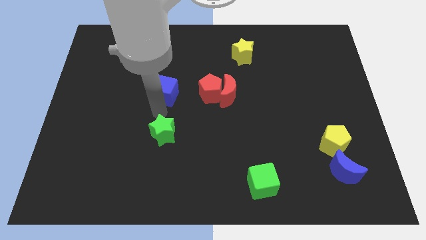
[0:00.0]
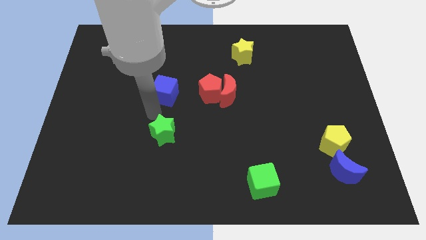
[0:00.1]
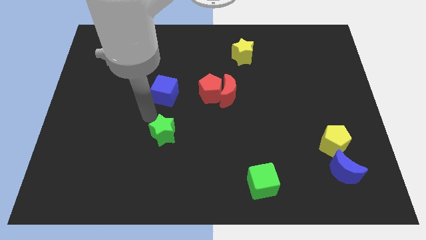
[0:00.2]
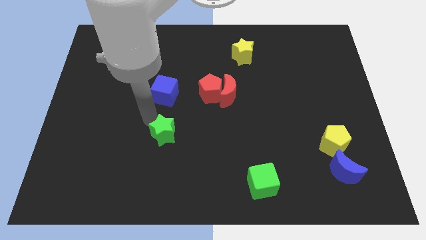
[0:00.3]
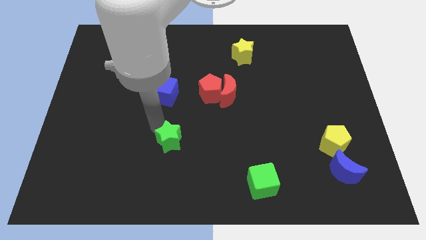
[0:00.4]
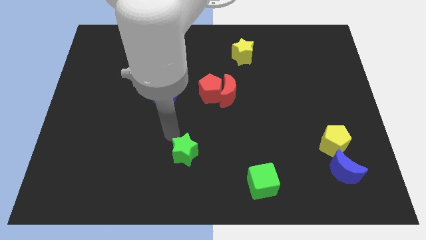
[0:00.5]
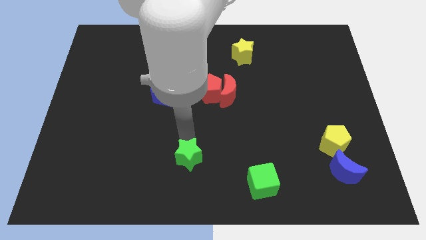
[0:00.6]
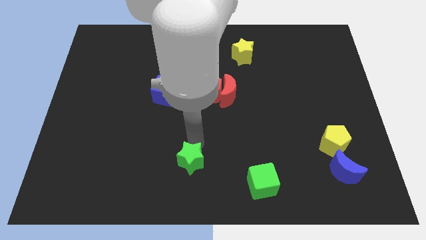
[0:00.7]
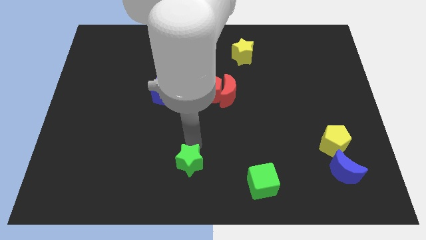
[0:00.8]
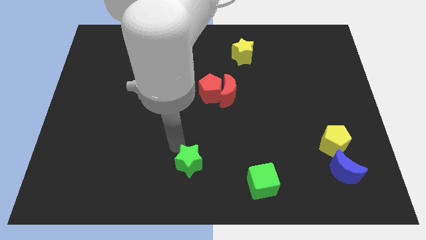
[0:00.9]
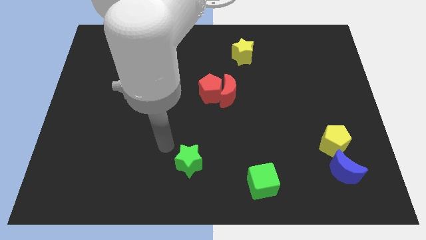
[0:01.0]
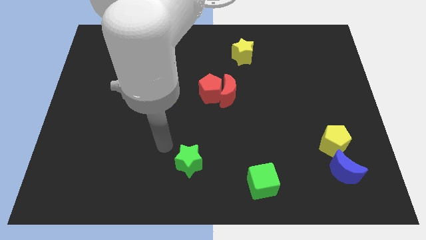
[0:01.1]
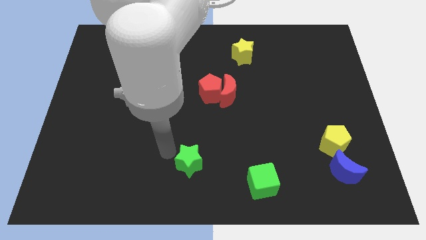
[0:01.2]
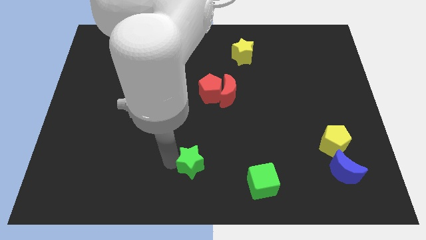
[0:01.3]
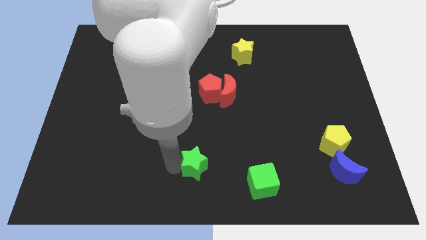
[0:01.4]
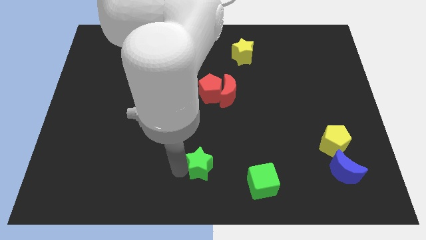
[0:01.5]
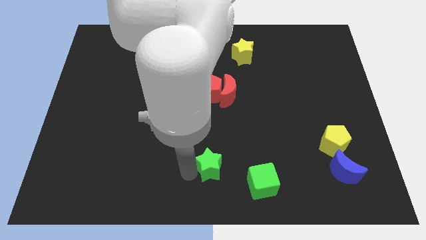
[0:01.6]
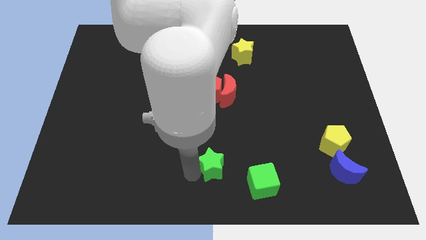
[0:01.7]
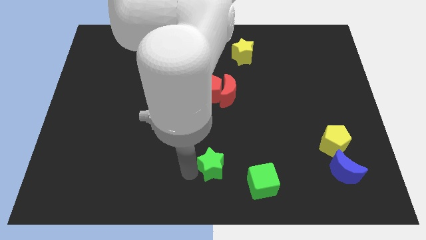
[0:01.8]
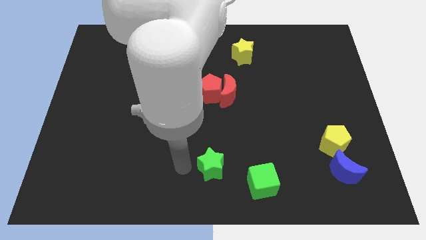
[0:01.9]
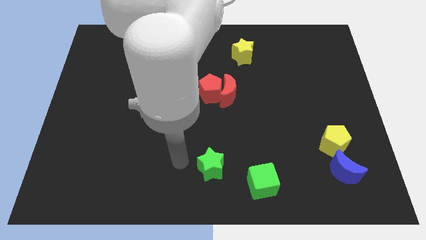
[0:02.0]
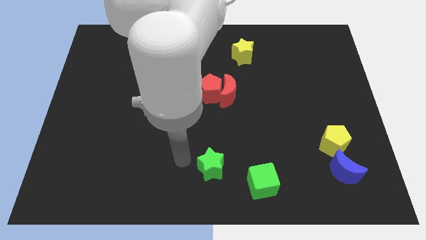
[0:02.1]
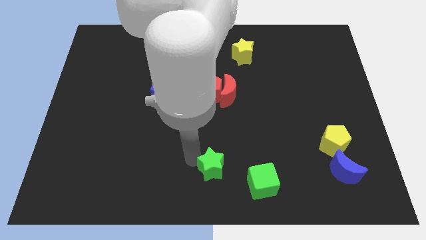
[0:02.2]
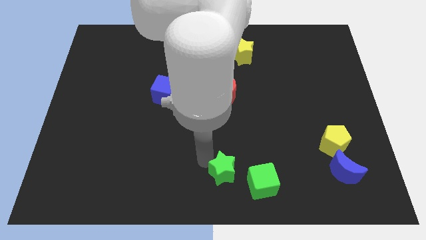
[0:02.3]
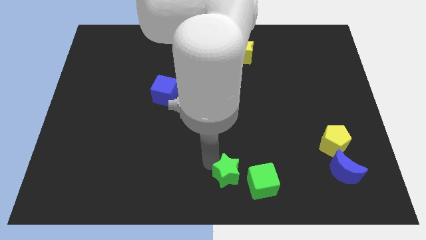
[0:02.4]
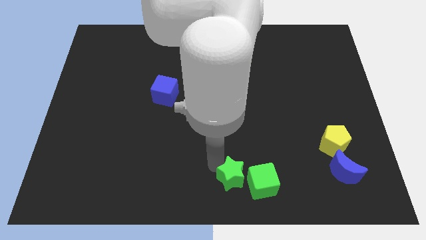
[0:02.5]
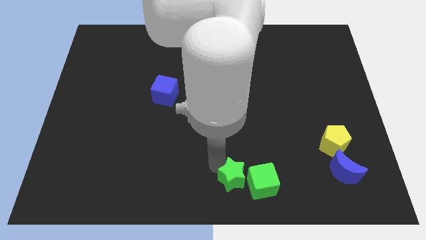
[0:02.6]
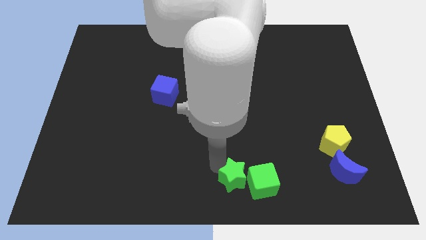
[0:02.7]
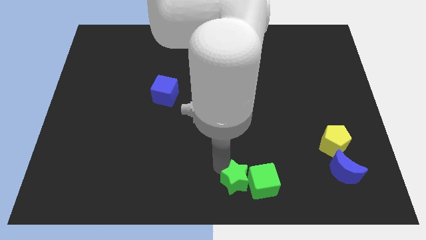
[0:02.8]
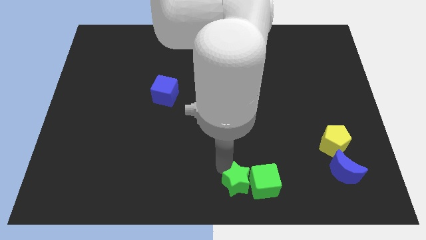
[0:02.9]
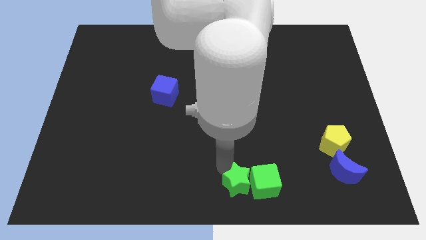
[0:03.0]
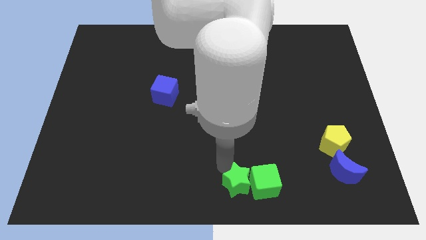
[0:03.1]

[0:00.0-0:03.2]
slide the green star to the left of the green cube

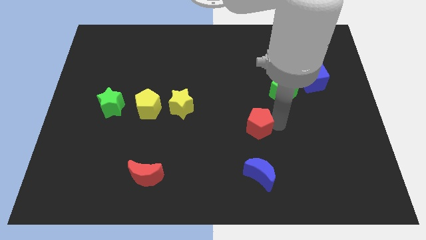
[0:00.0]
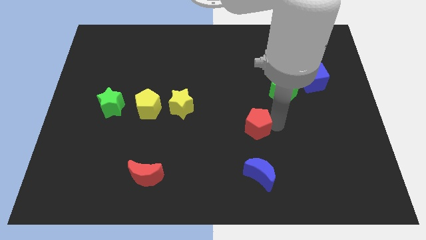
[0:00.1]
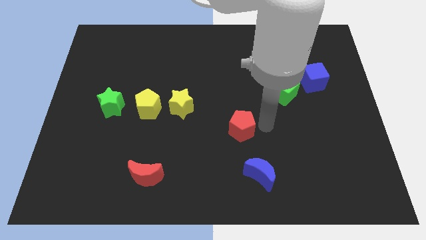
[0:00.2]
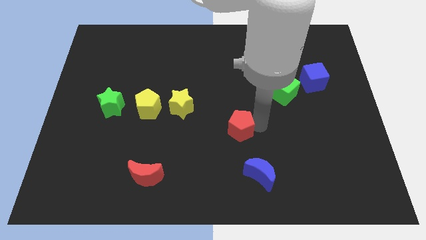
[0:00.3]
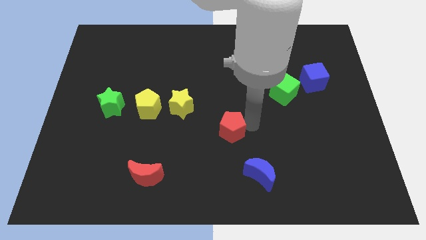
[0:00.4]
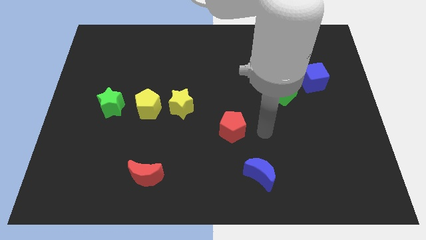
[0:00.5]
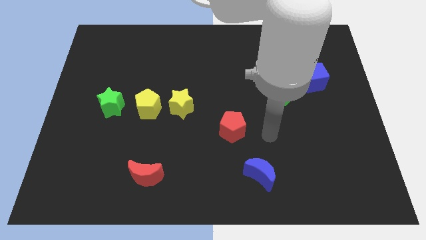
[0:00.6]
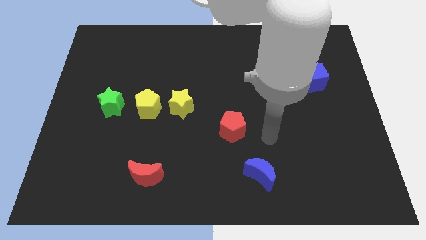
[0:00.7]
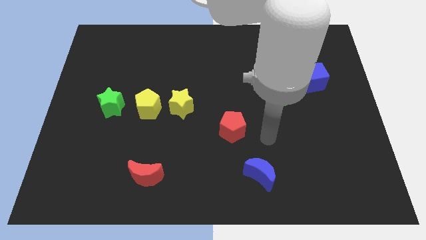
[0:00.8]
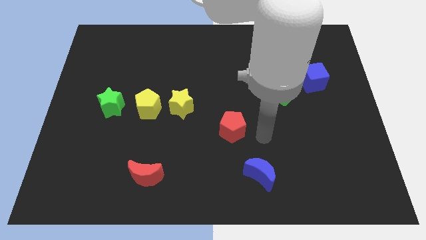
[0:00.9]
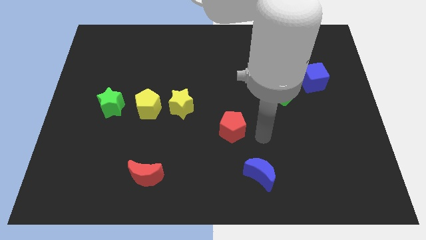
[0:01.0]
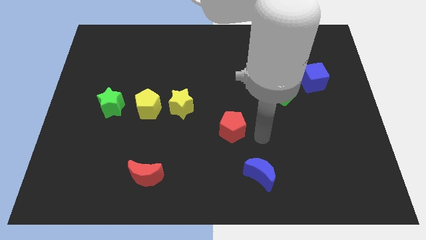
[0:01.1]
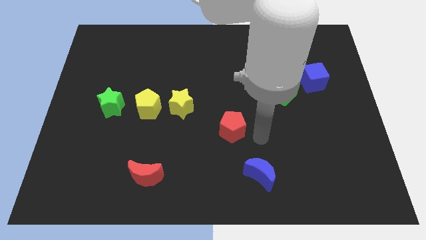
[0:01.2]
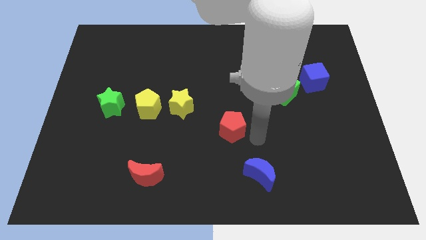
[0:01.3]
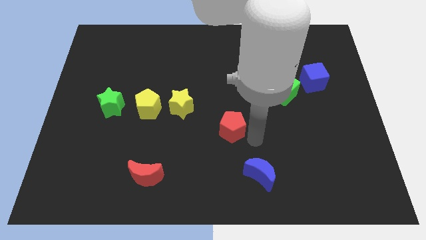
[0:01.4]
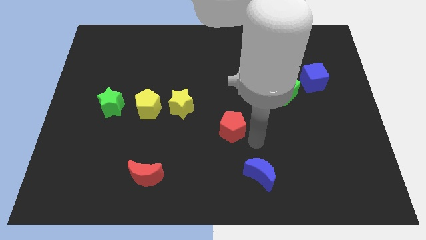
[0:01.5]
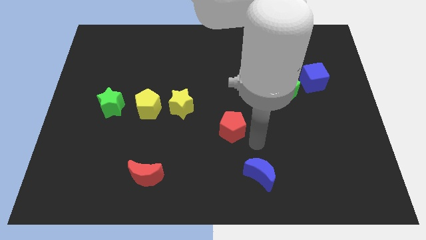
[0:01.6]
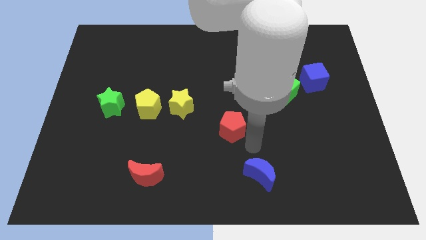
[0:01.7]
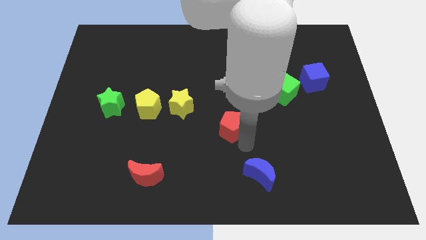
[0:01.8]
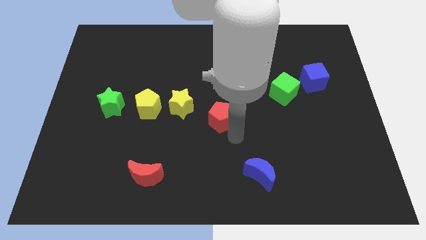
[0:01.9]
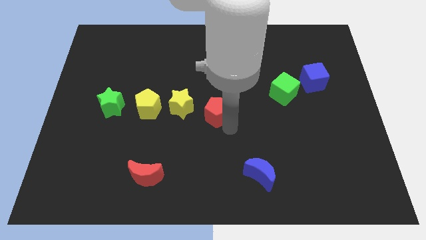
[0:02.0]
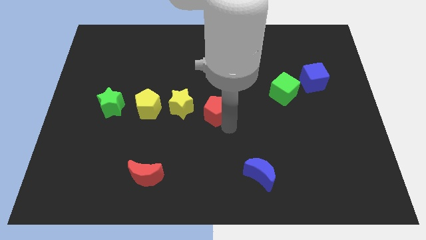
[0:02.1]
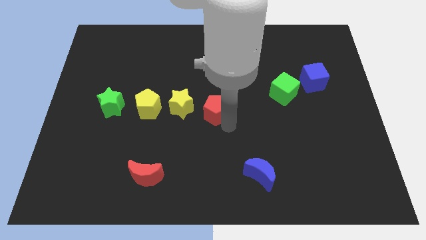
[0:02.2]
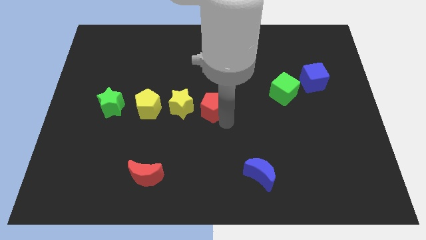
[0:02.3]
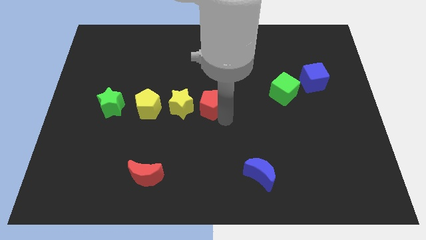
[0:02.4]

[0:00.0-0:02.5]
place red pentagon beside yellow star

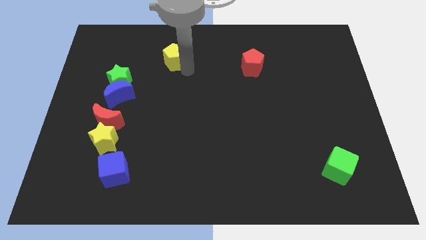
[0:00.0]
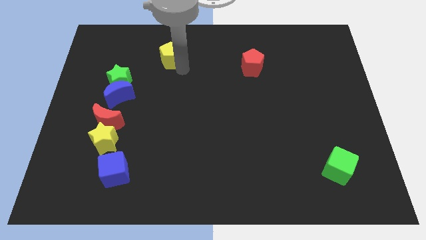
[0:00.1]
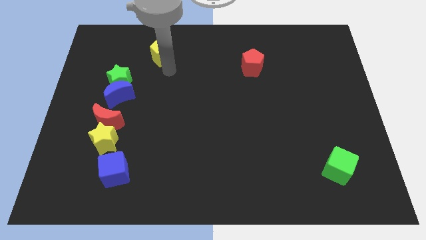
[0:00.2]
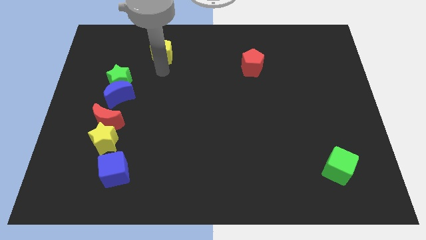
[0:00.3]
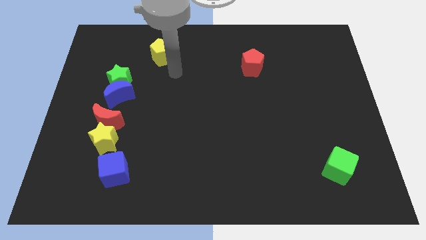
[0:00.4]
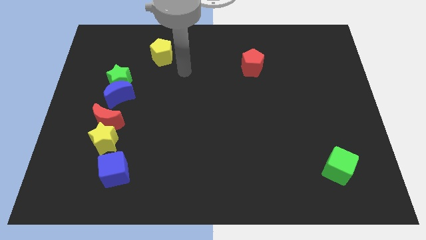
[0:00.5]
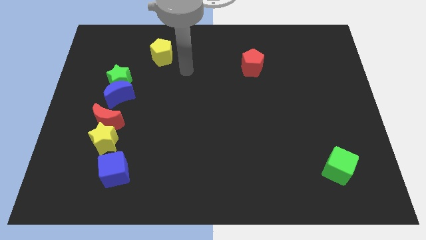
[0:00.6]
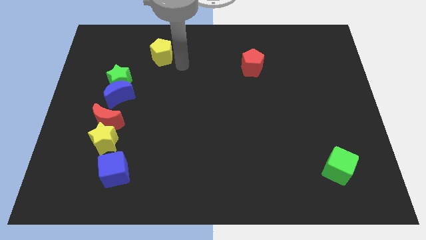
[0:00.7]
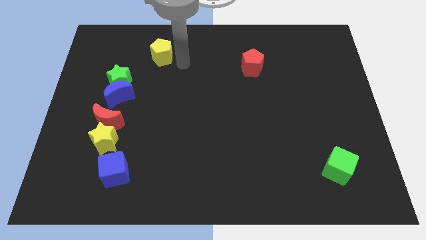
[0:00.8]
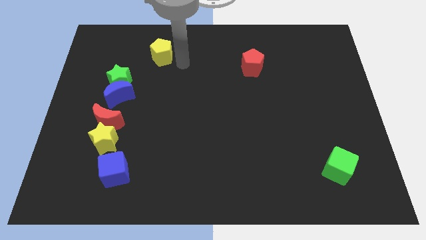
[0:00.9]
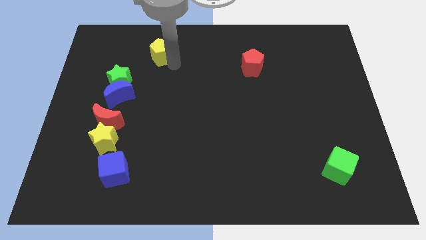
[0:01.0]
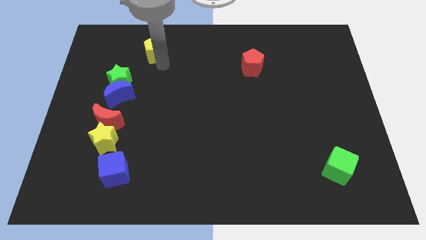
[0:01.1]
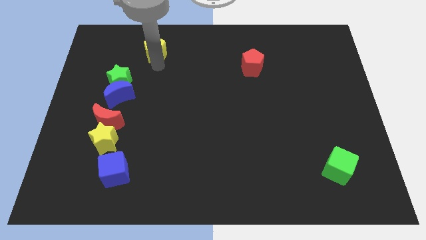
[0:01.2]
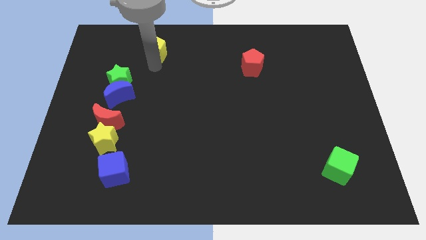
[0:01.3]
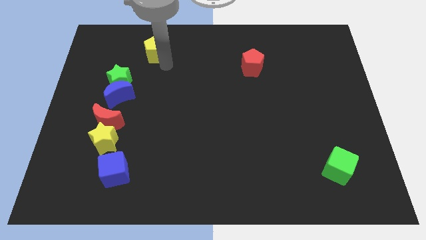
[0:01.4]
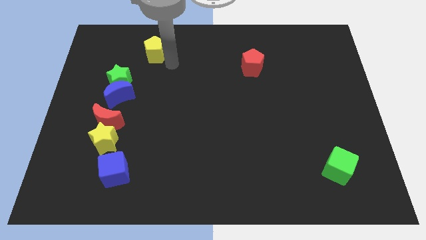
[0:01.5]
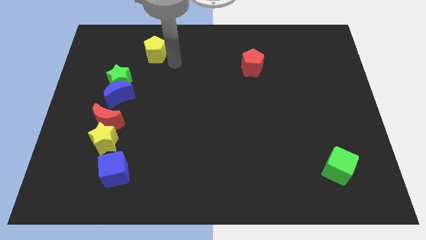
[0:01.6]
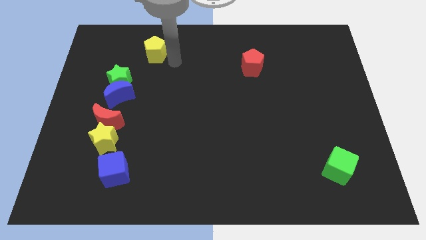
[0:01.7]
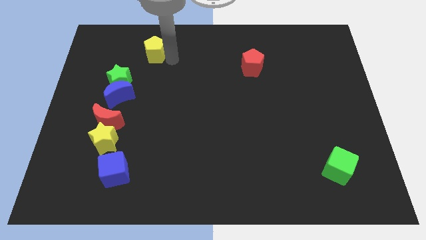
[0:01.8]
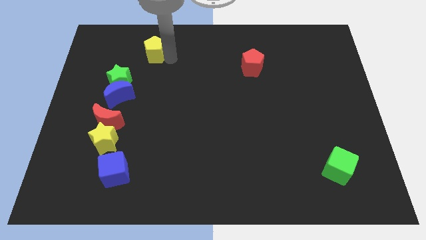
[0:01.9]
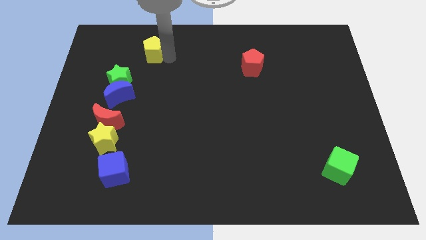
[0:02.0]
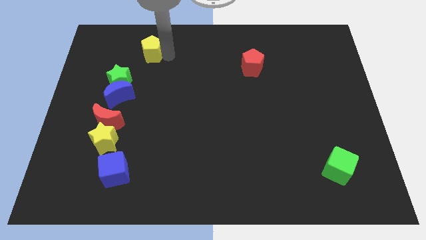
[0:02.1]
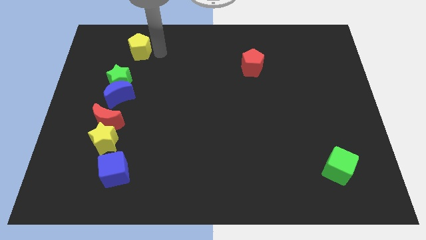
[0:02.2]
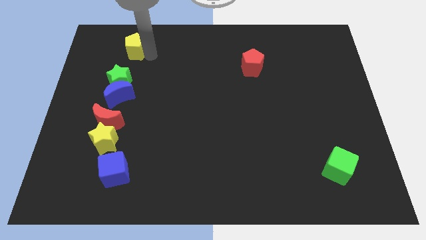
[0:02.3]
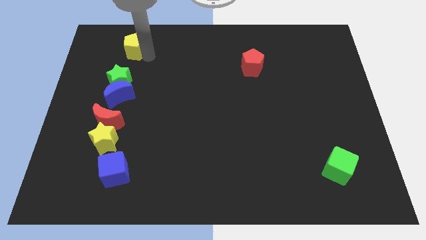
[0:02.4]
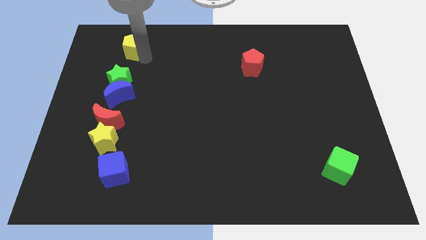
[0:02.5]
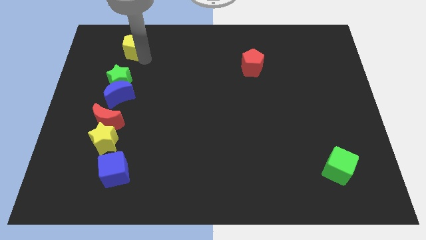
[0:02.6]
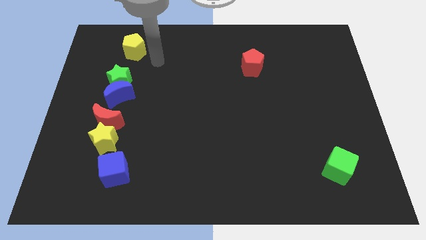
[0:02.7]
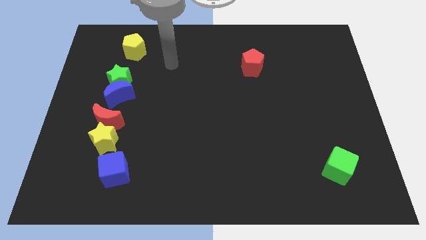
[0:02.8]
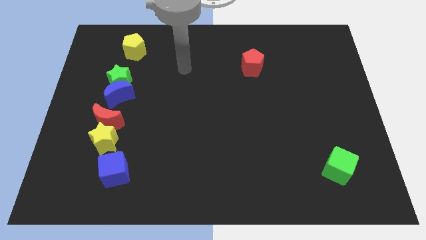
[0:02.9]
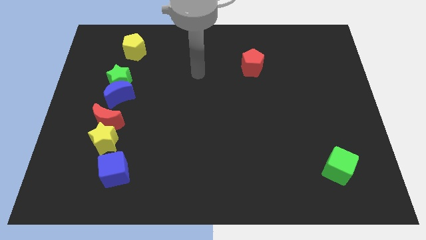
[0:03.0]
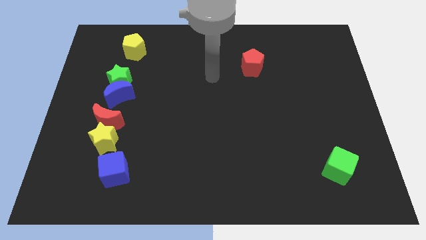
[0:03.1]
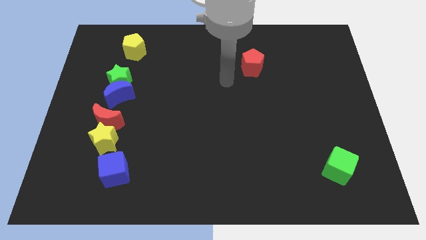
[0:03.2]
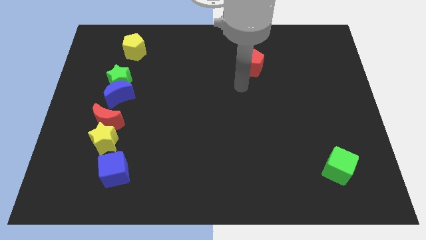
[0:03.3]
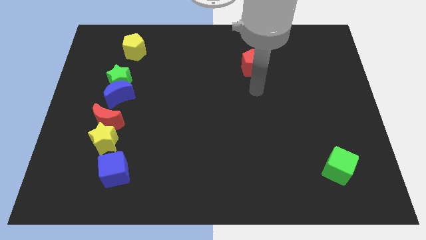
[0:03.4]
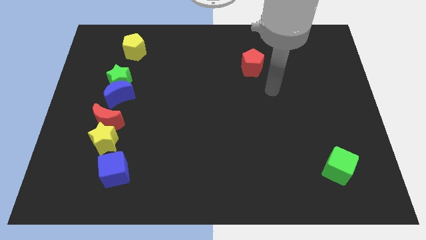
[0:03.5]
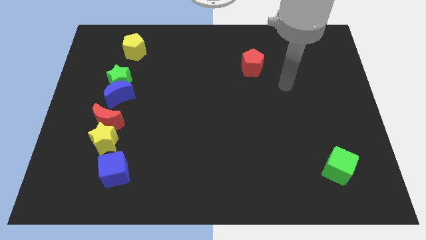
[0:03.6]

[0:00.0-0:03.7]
place the yellow pentagon above the green star
